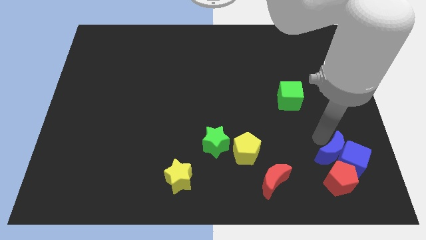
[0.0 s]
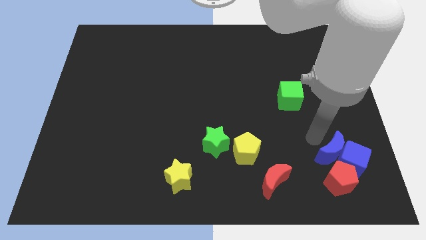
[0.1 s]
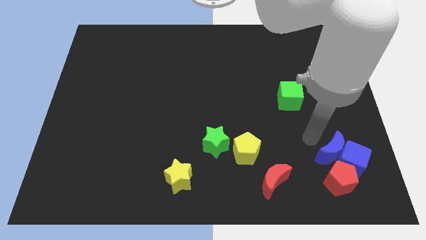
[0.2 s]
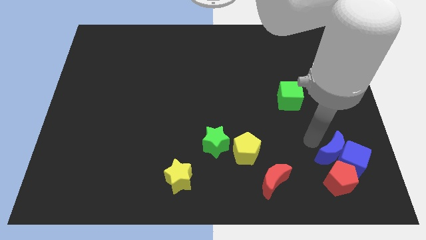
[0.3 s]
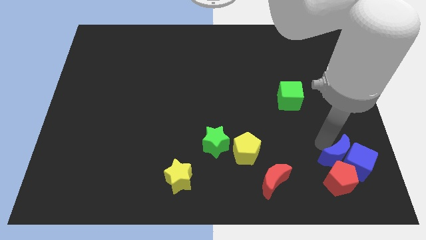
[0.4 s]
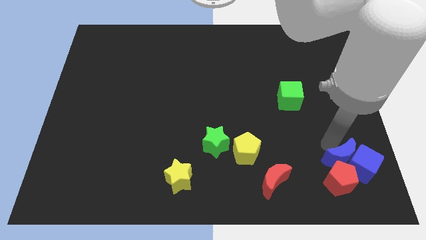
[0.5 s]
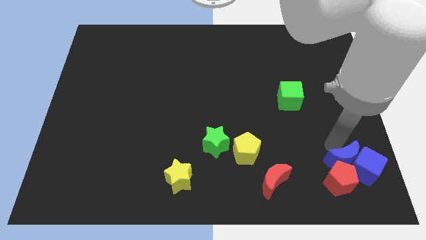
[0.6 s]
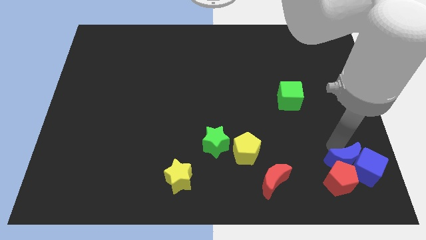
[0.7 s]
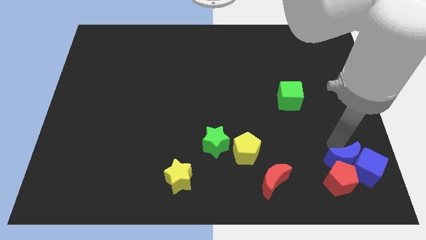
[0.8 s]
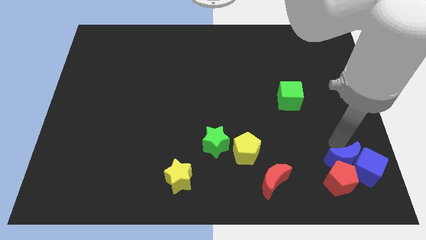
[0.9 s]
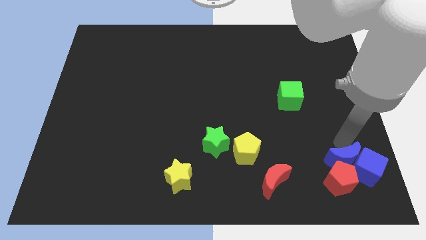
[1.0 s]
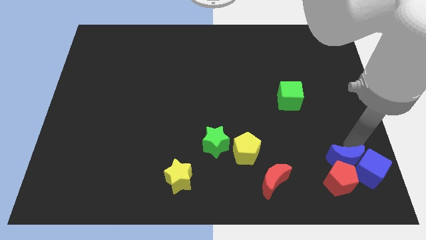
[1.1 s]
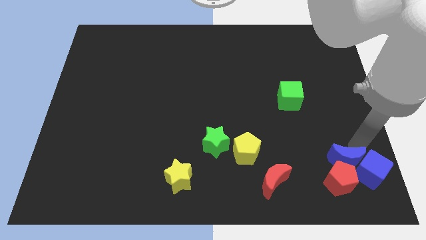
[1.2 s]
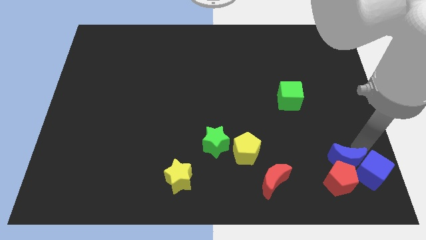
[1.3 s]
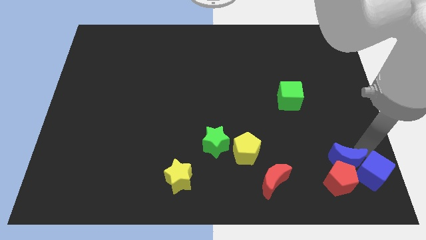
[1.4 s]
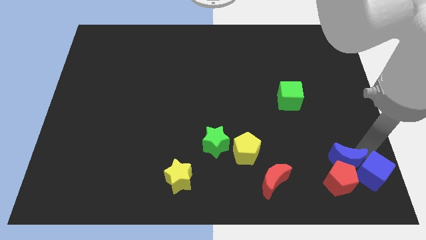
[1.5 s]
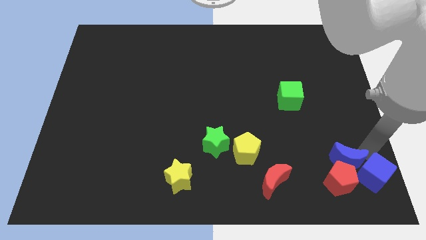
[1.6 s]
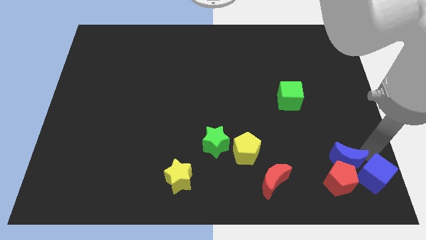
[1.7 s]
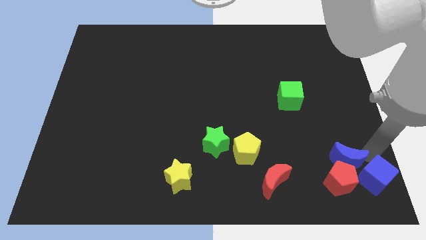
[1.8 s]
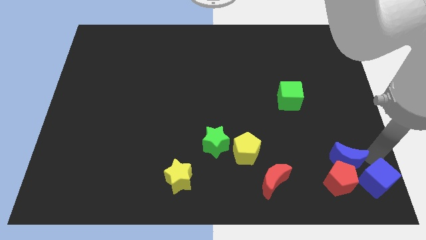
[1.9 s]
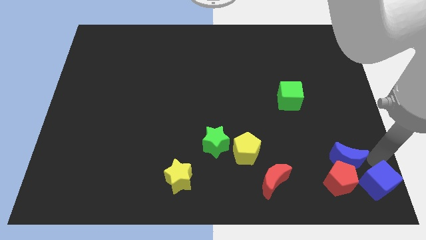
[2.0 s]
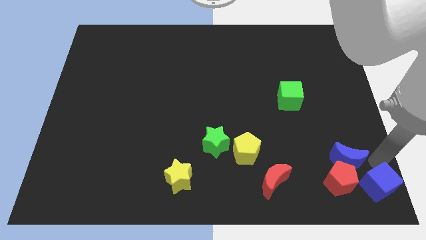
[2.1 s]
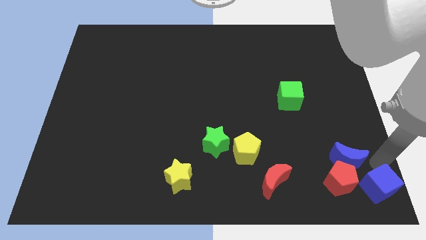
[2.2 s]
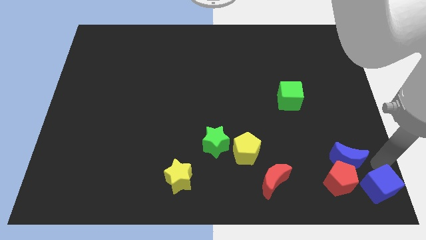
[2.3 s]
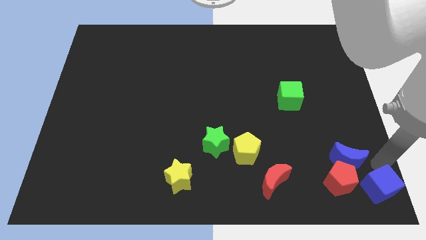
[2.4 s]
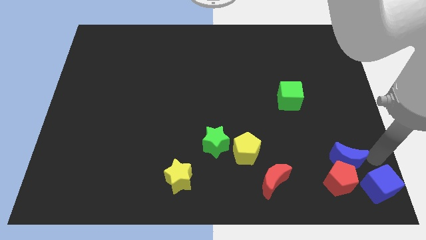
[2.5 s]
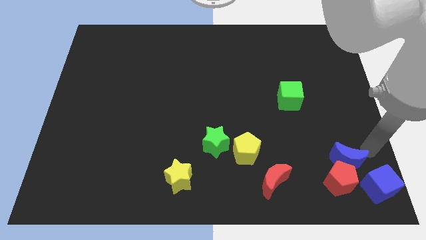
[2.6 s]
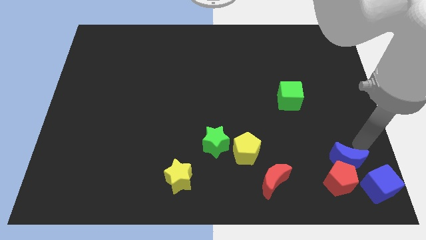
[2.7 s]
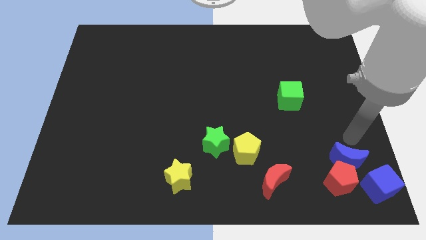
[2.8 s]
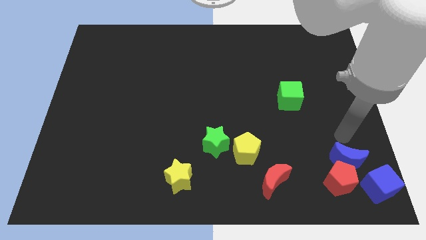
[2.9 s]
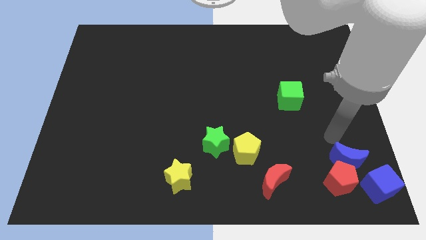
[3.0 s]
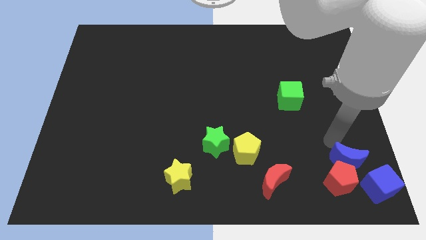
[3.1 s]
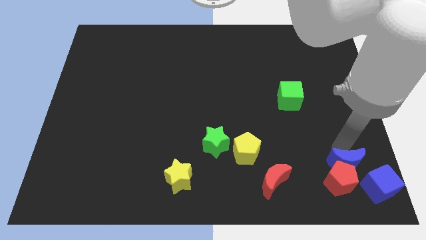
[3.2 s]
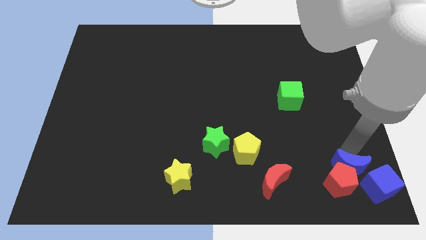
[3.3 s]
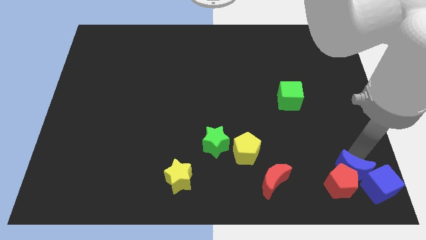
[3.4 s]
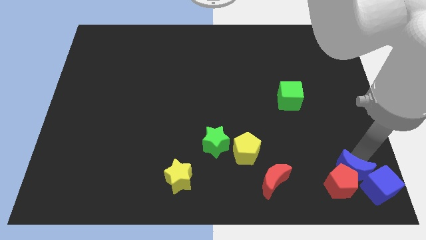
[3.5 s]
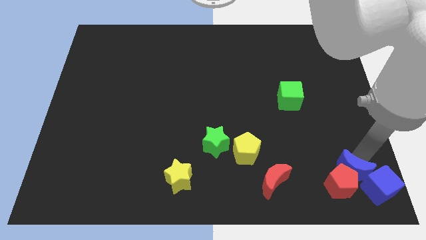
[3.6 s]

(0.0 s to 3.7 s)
push blue moon into red pentagon and blue cube

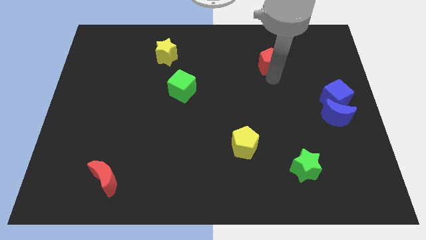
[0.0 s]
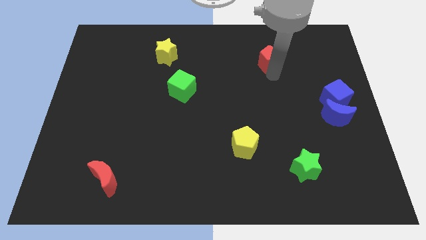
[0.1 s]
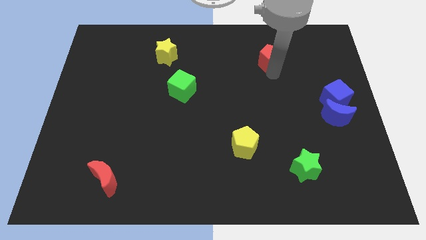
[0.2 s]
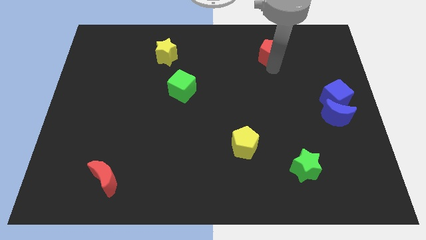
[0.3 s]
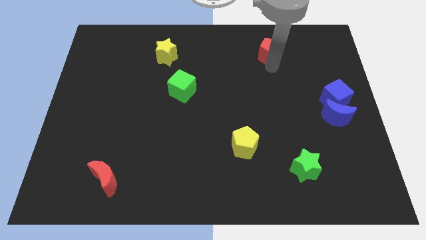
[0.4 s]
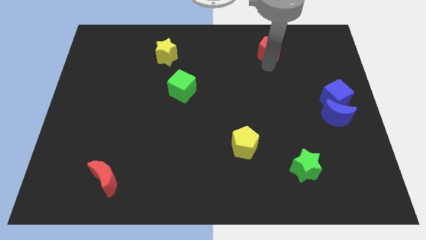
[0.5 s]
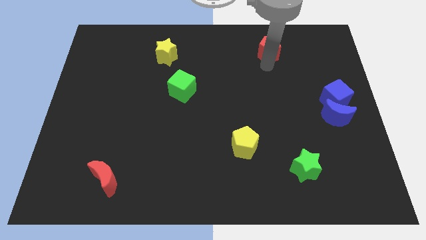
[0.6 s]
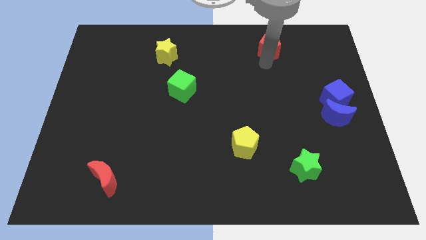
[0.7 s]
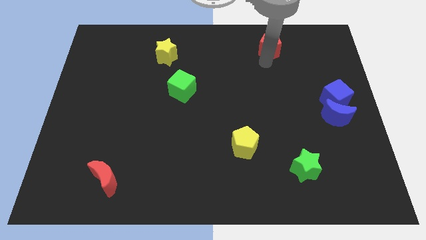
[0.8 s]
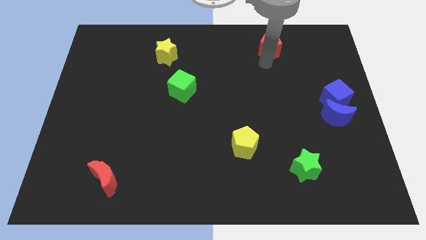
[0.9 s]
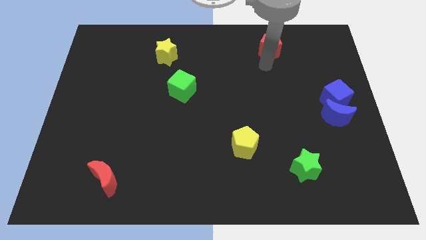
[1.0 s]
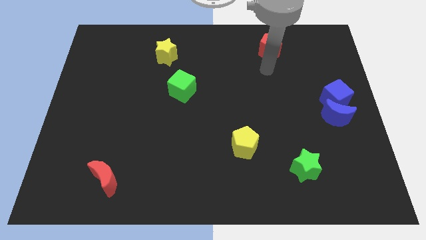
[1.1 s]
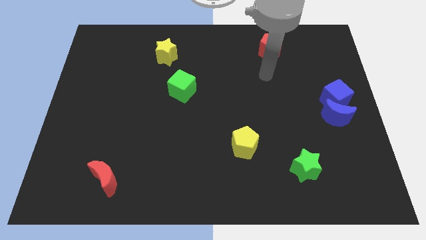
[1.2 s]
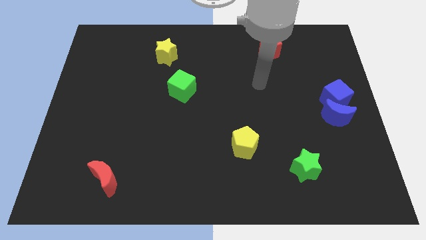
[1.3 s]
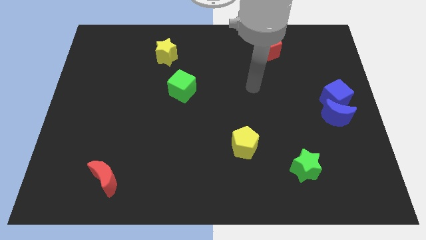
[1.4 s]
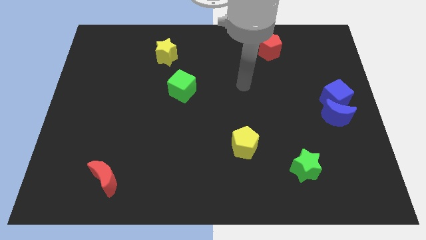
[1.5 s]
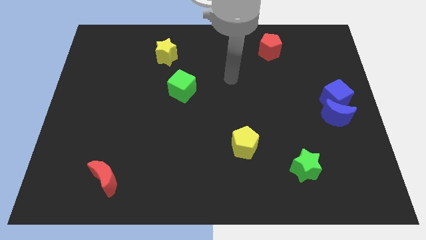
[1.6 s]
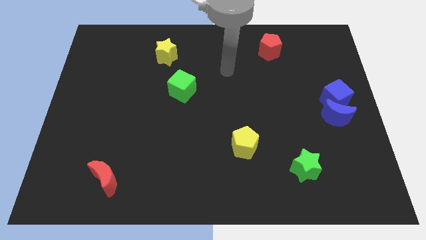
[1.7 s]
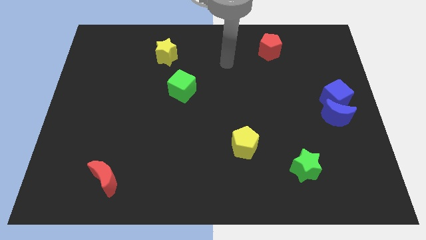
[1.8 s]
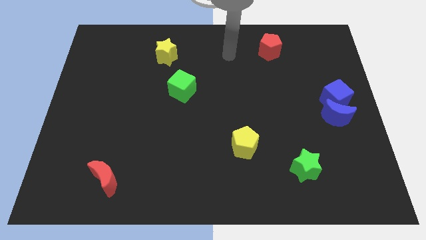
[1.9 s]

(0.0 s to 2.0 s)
push the red pentagon to the top of the board

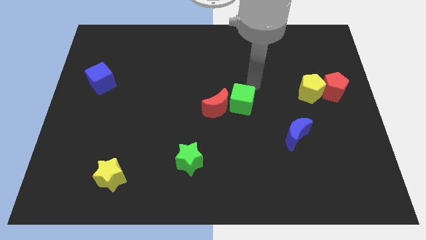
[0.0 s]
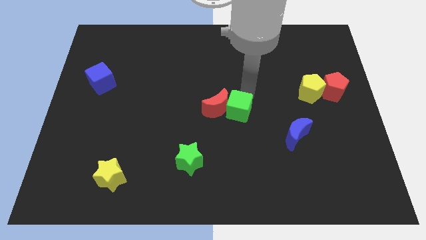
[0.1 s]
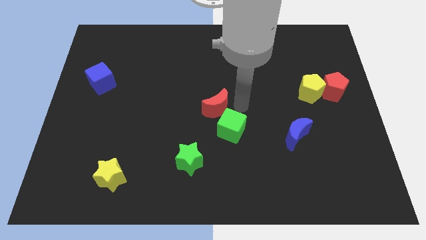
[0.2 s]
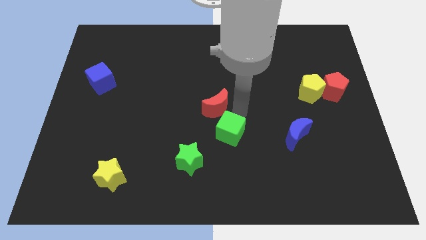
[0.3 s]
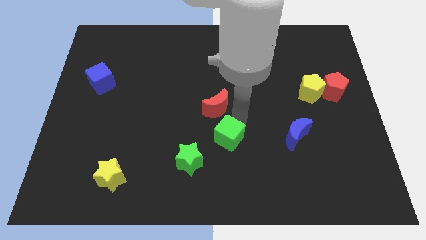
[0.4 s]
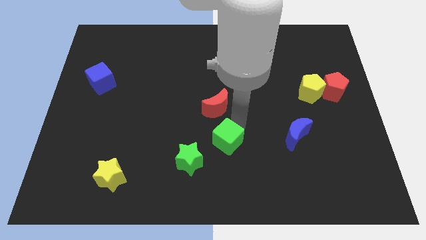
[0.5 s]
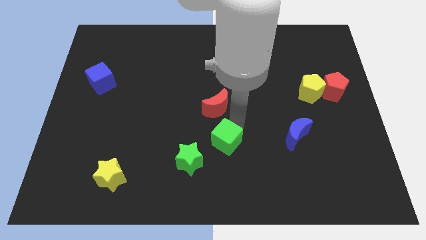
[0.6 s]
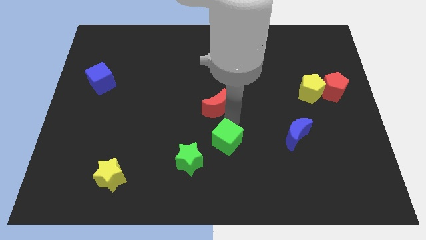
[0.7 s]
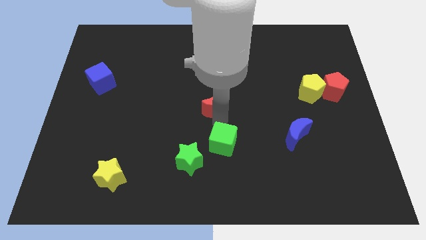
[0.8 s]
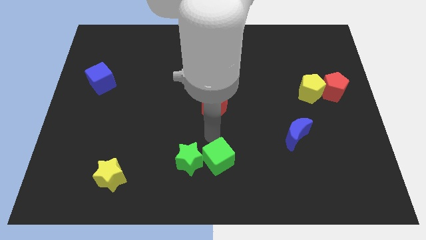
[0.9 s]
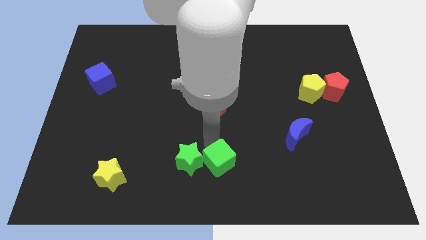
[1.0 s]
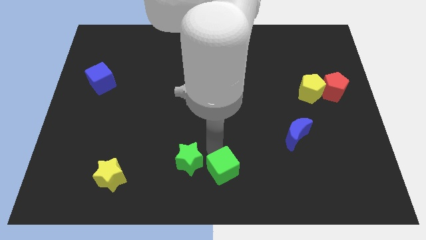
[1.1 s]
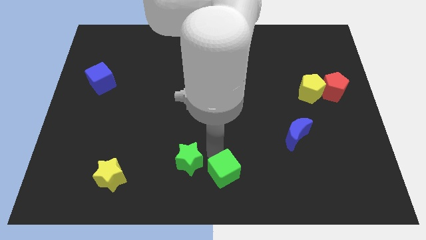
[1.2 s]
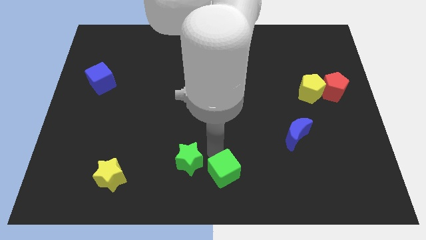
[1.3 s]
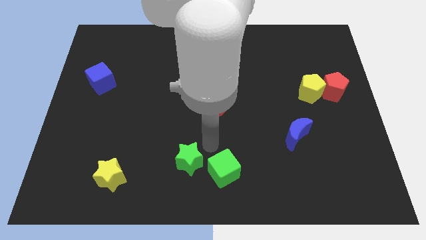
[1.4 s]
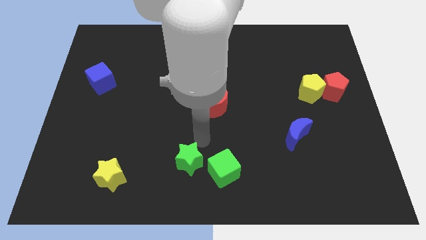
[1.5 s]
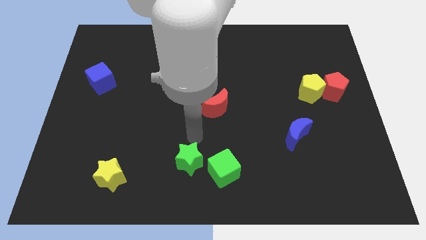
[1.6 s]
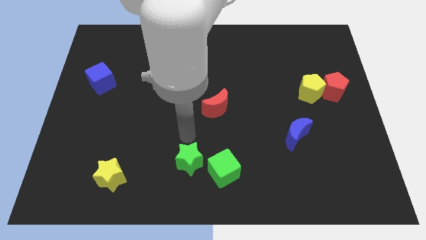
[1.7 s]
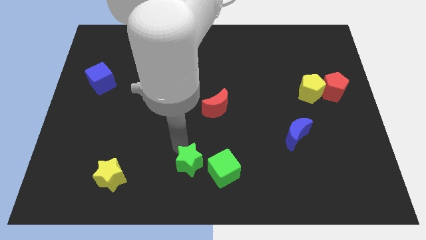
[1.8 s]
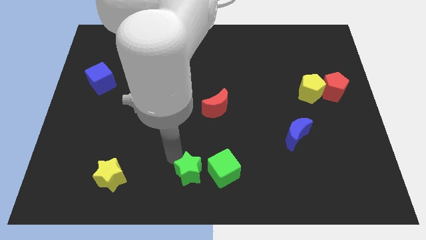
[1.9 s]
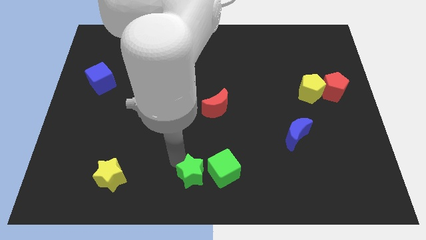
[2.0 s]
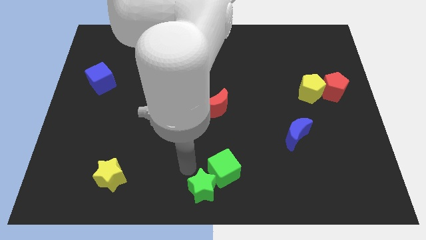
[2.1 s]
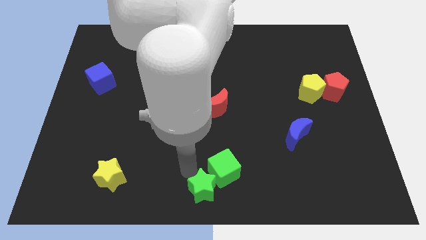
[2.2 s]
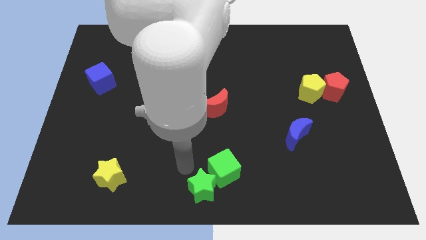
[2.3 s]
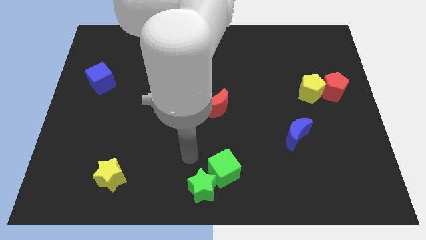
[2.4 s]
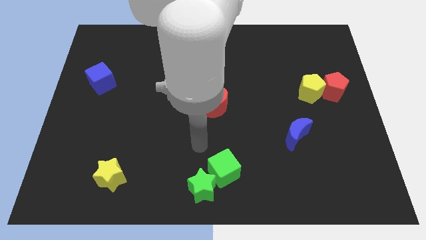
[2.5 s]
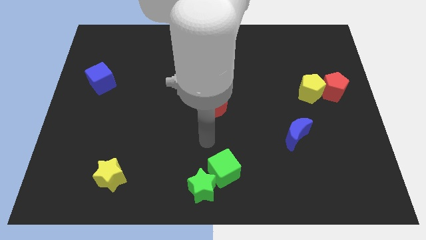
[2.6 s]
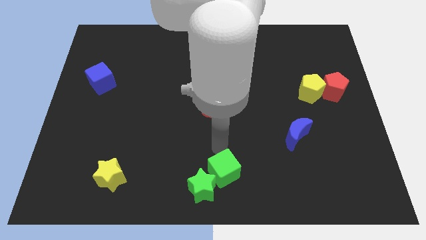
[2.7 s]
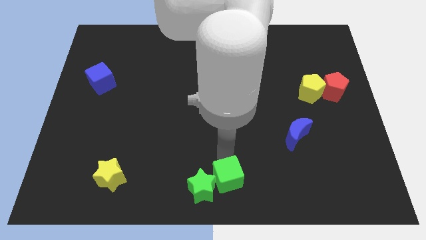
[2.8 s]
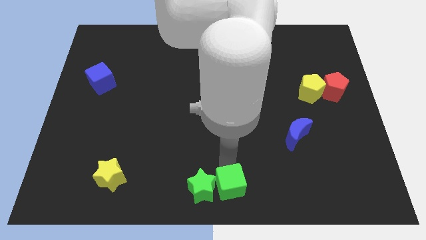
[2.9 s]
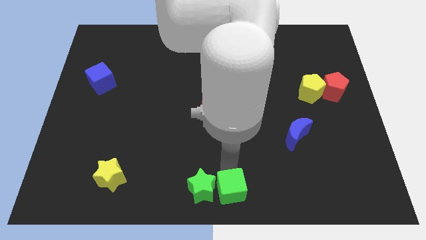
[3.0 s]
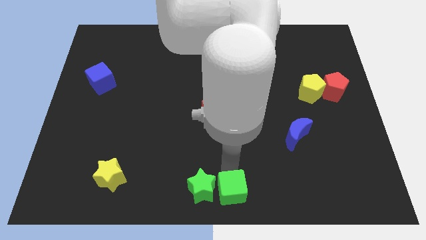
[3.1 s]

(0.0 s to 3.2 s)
push the green blocks to the bottom center

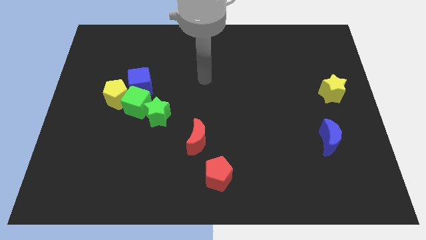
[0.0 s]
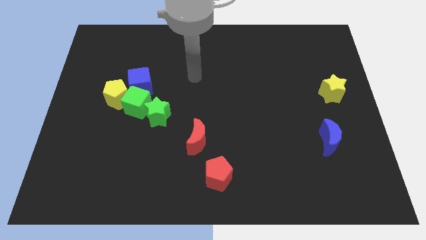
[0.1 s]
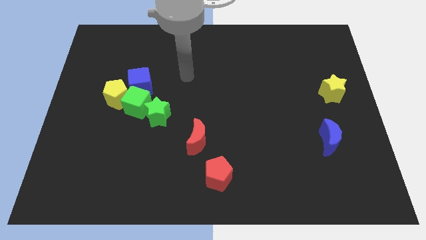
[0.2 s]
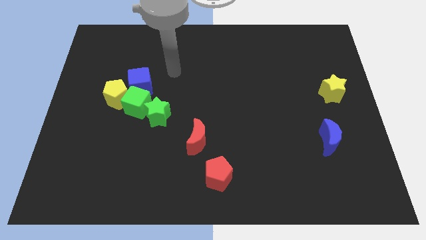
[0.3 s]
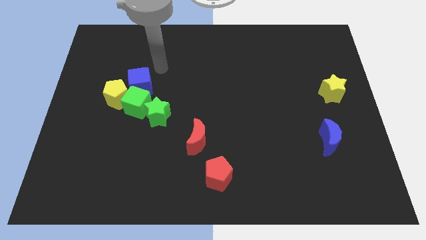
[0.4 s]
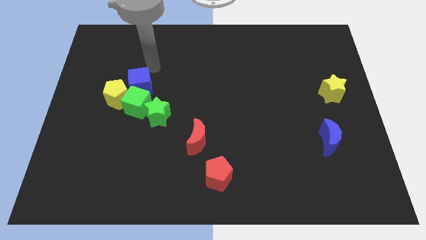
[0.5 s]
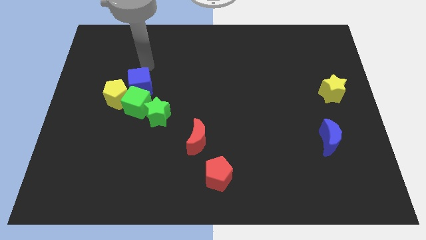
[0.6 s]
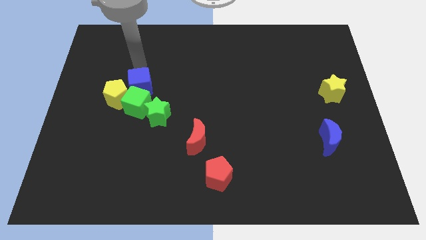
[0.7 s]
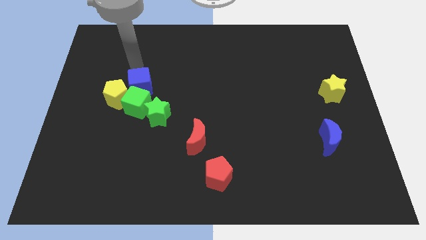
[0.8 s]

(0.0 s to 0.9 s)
move your arm top of the blue cube
